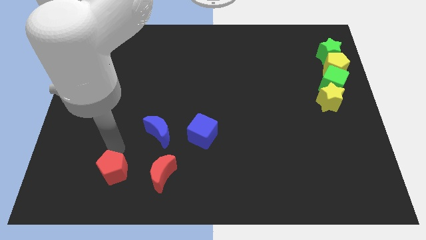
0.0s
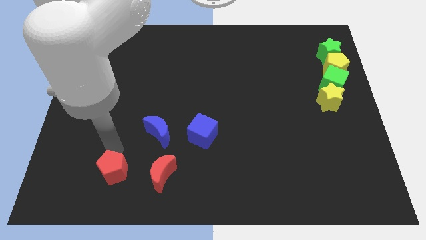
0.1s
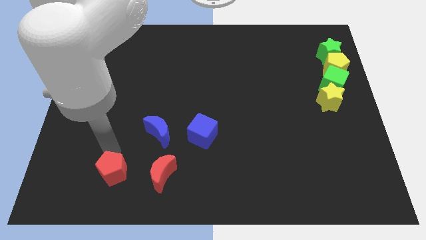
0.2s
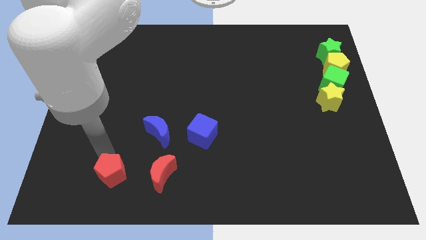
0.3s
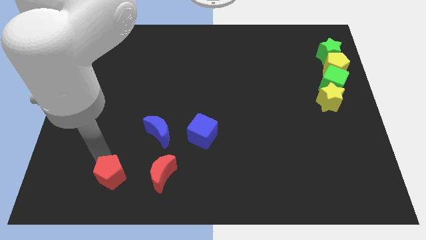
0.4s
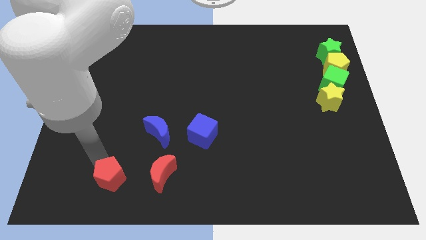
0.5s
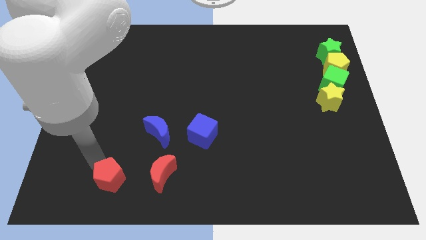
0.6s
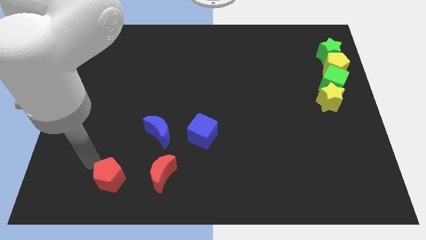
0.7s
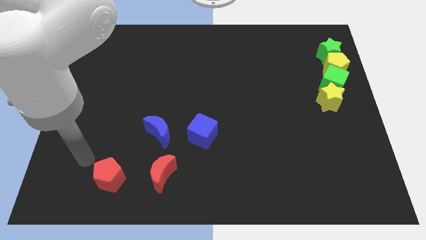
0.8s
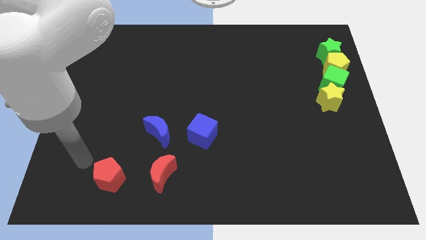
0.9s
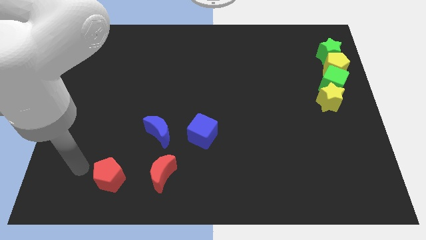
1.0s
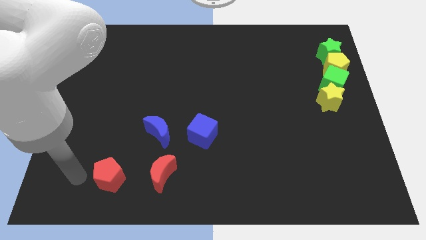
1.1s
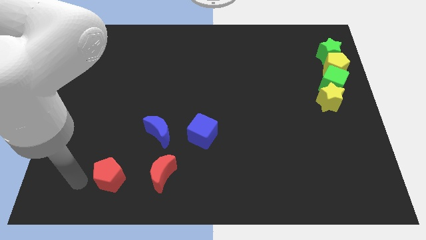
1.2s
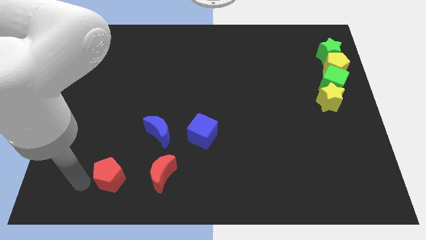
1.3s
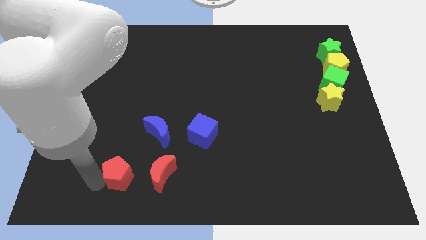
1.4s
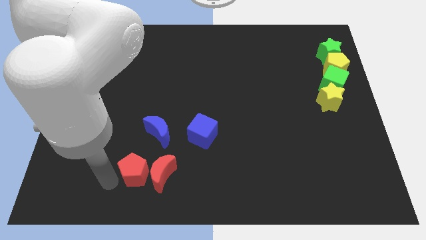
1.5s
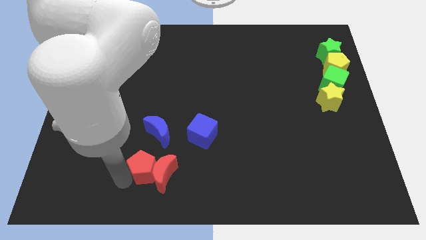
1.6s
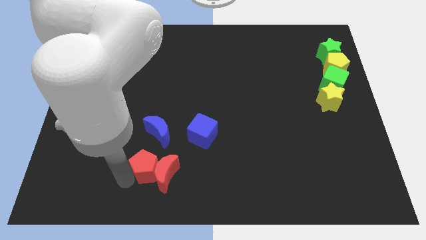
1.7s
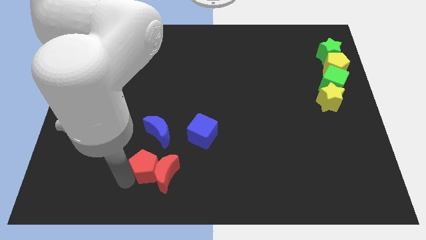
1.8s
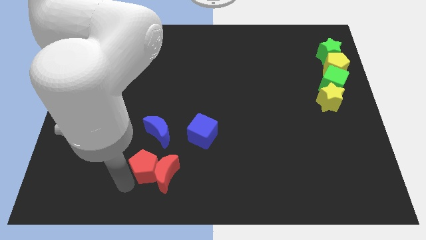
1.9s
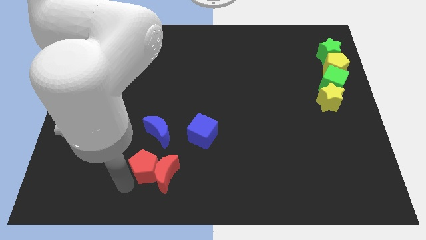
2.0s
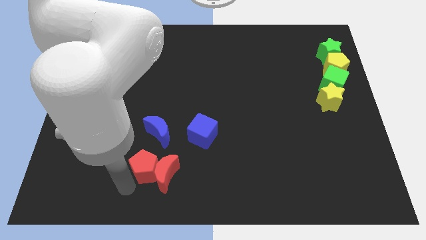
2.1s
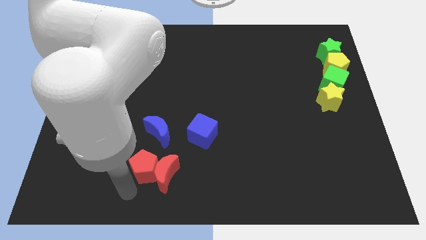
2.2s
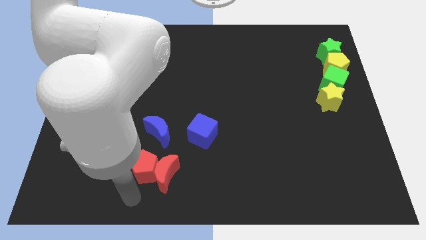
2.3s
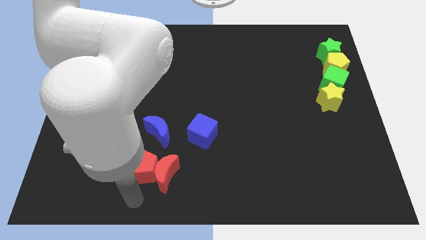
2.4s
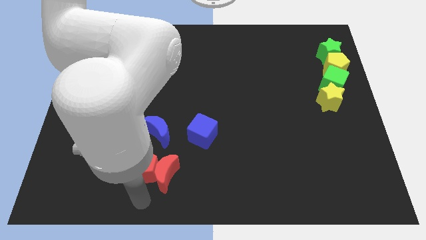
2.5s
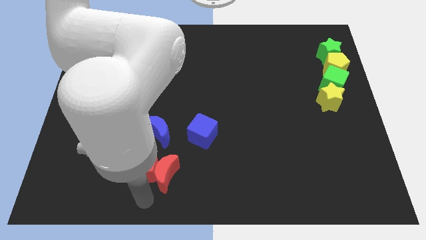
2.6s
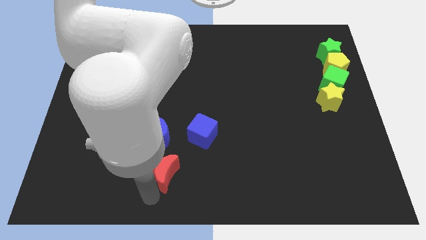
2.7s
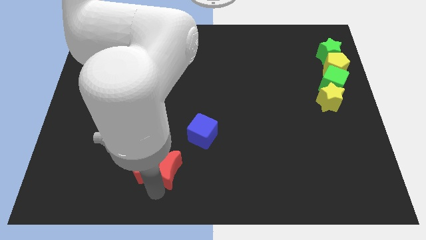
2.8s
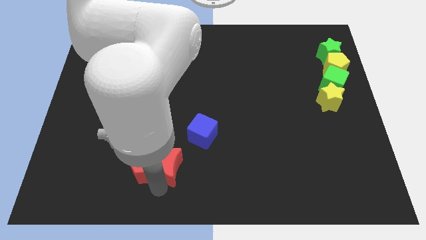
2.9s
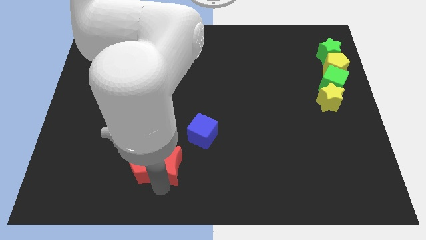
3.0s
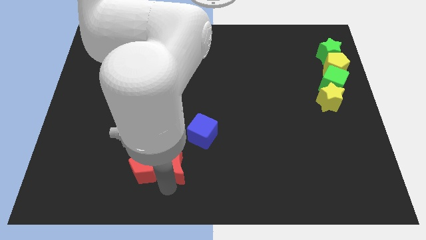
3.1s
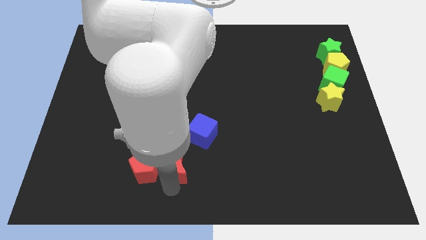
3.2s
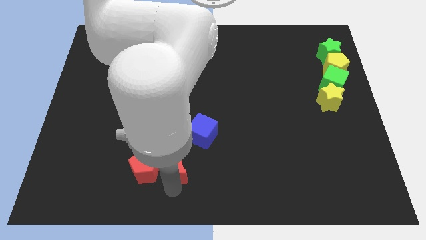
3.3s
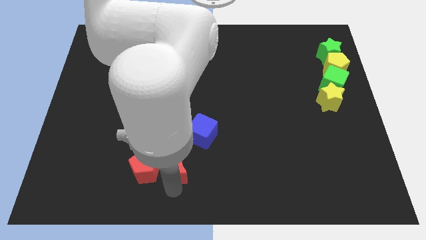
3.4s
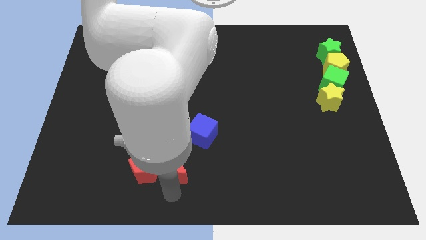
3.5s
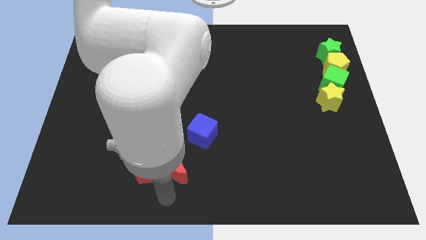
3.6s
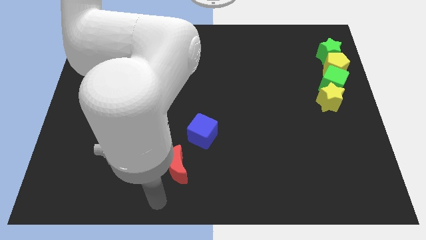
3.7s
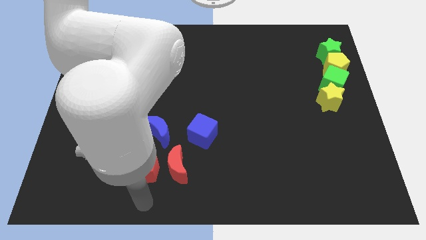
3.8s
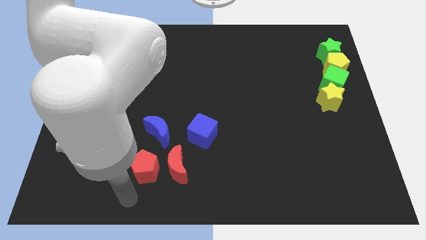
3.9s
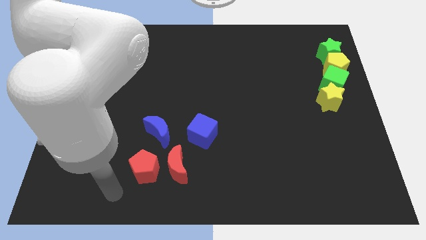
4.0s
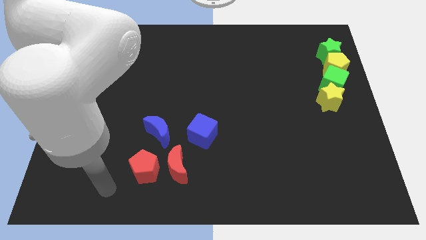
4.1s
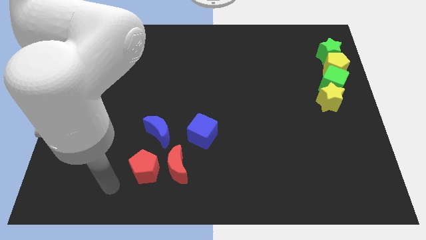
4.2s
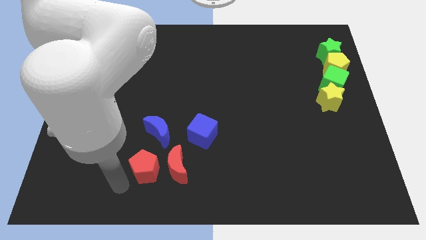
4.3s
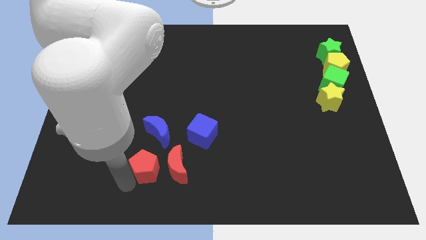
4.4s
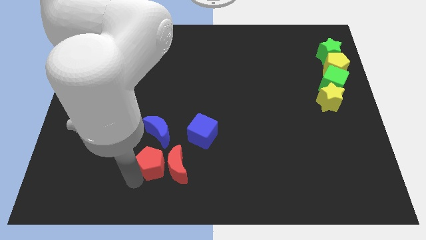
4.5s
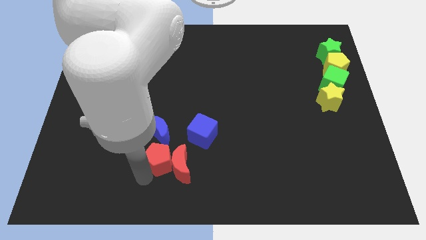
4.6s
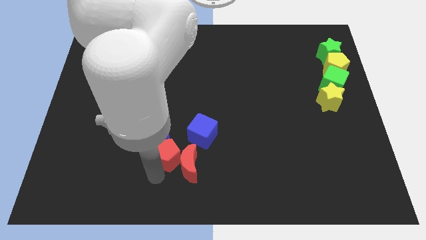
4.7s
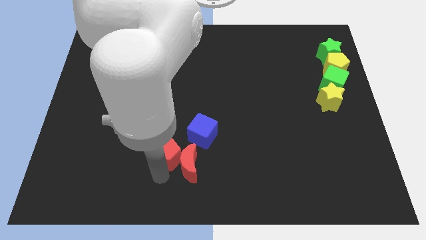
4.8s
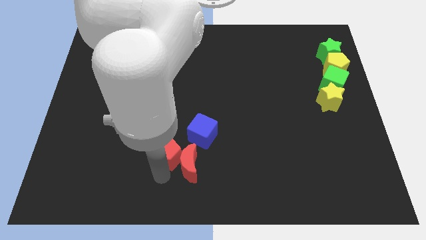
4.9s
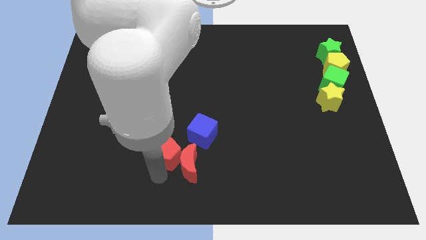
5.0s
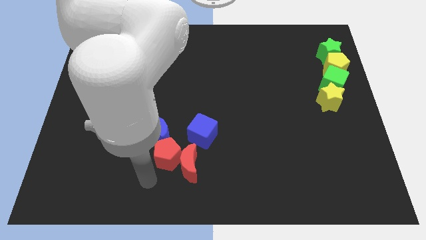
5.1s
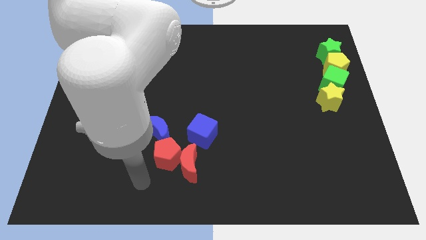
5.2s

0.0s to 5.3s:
push the red pentagon into the red crescent

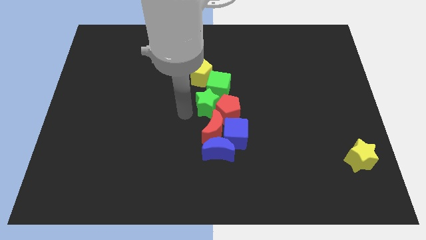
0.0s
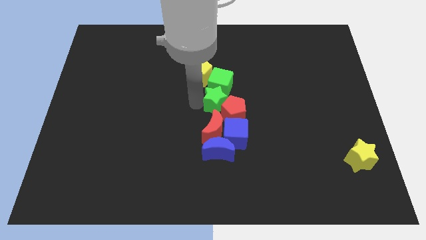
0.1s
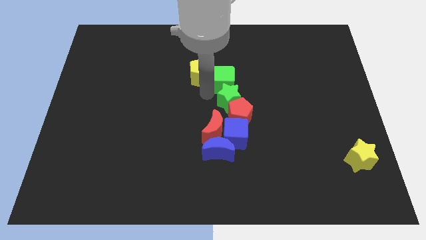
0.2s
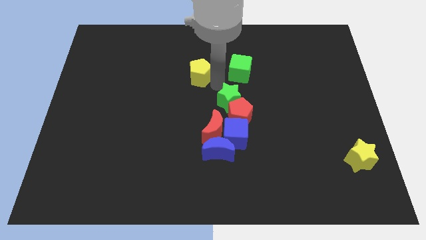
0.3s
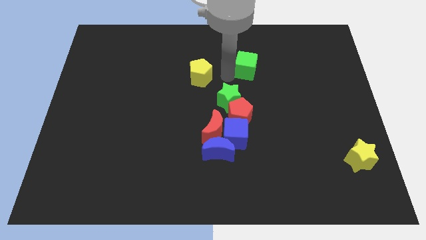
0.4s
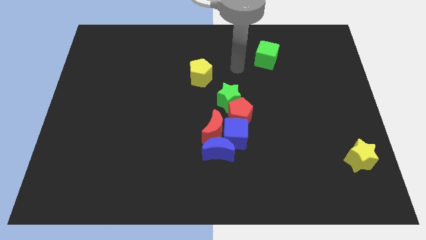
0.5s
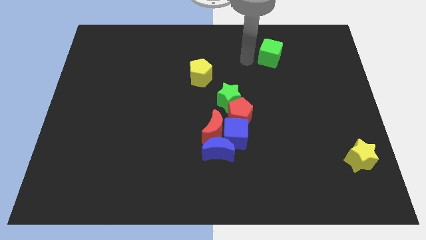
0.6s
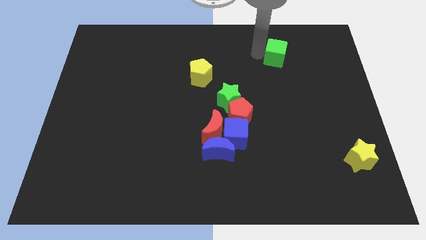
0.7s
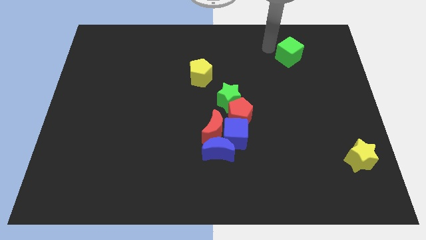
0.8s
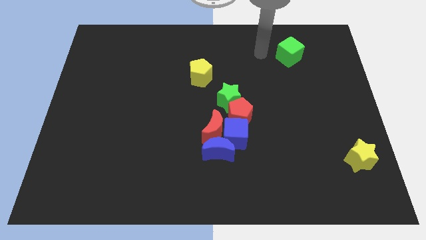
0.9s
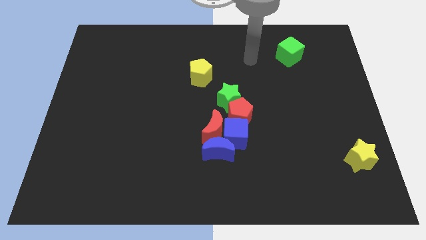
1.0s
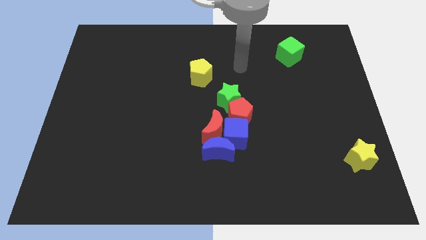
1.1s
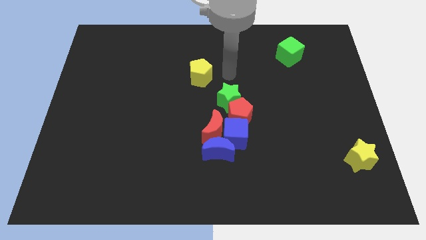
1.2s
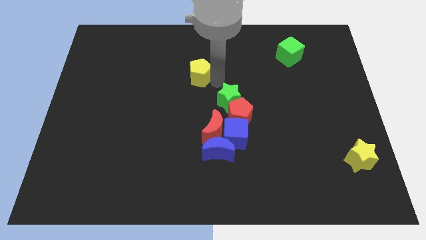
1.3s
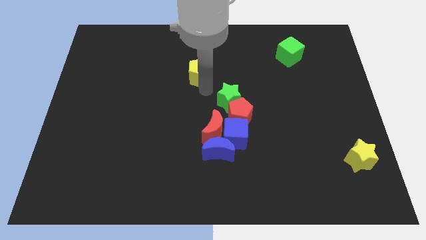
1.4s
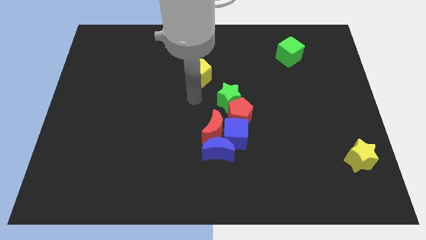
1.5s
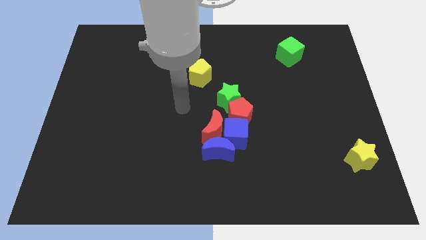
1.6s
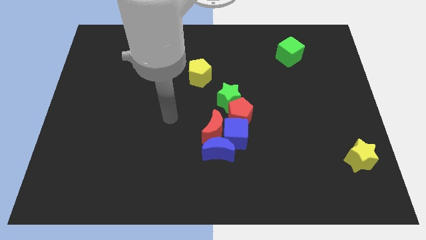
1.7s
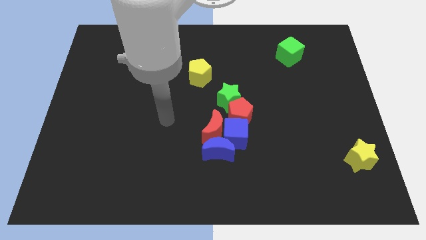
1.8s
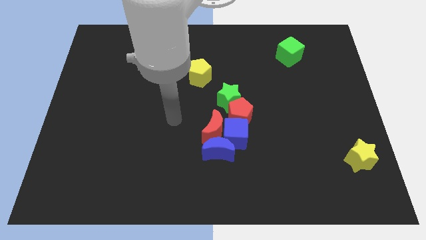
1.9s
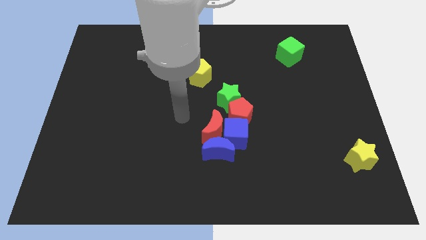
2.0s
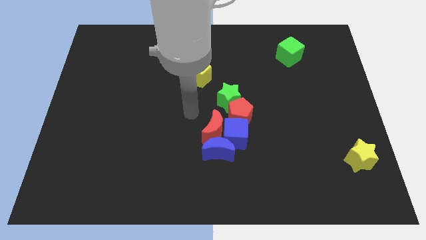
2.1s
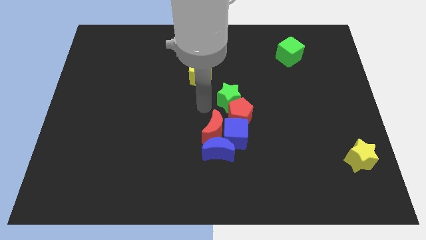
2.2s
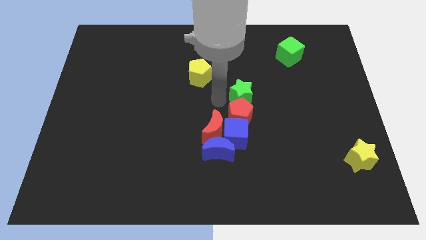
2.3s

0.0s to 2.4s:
push the green cube away from the green star and move away

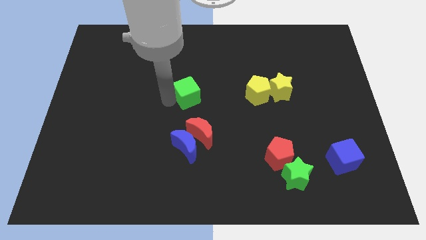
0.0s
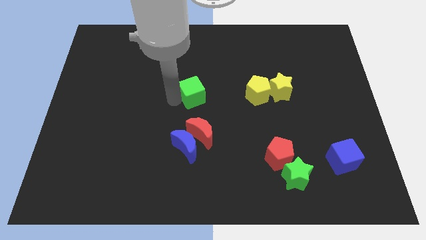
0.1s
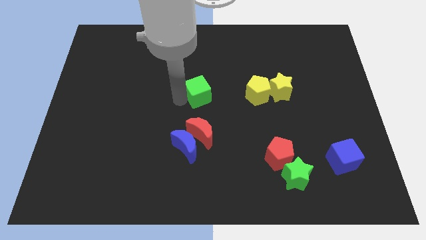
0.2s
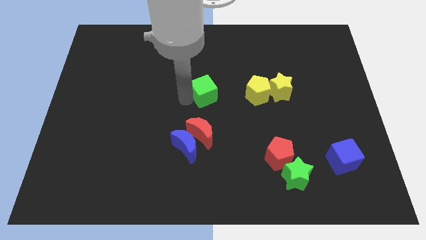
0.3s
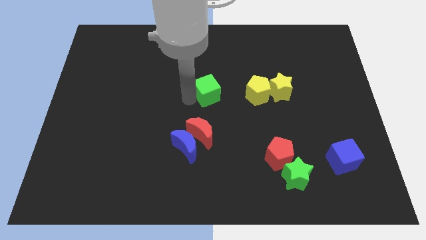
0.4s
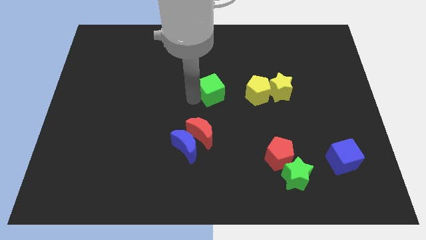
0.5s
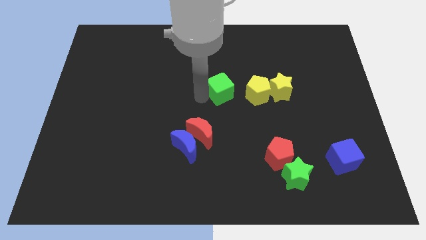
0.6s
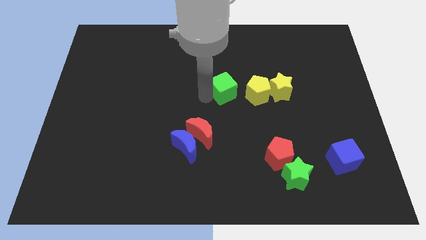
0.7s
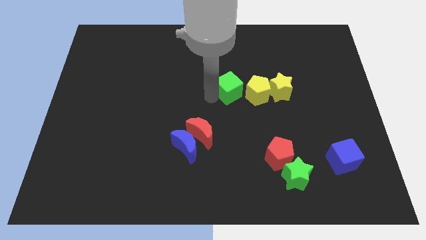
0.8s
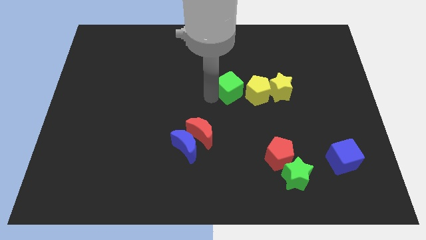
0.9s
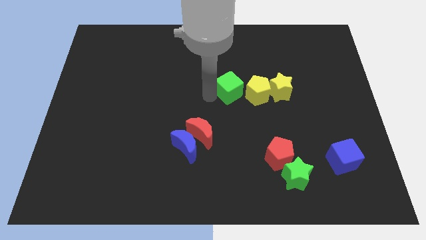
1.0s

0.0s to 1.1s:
move the green cube close to the yellow pentagon

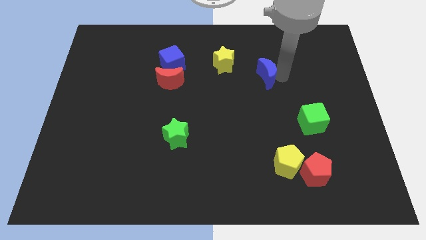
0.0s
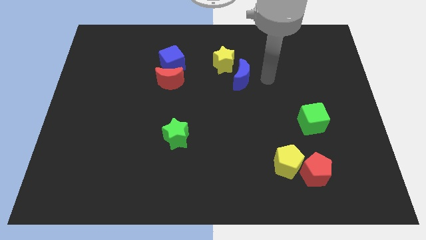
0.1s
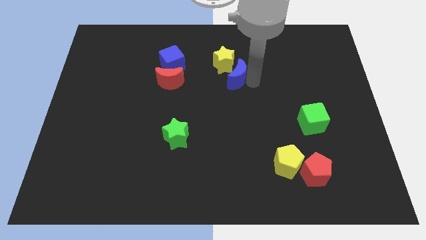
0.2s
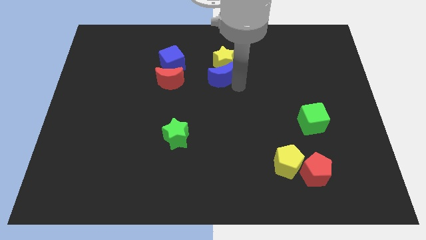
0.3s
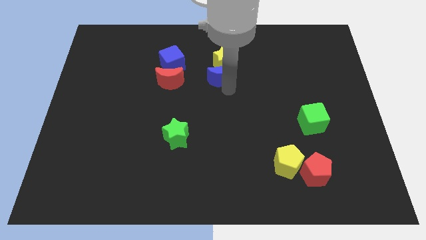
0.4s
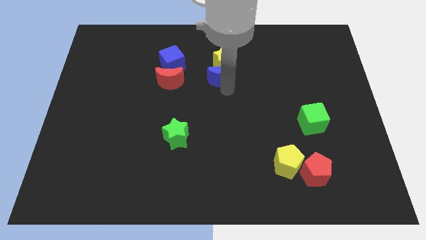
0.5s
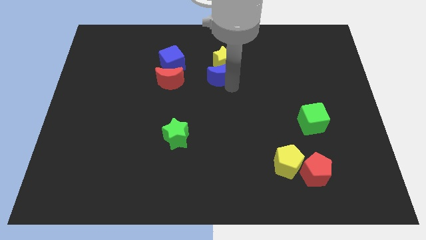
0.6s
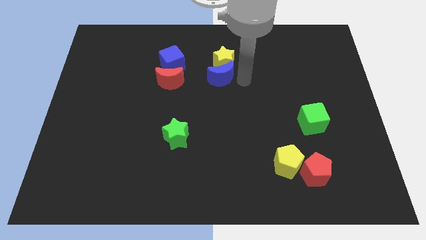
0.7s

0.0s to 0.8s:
push the blue crescent below the yellow star
